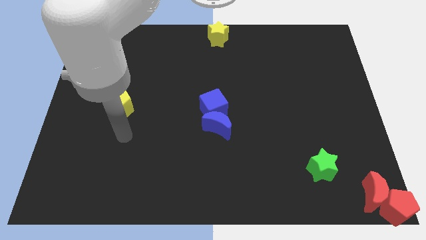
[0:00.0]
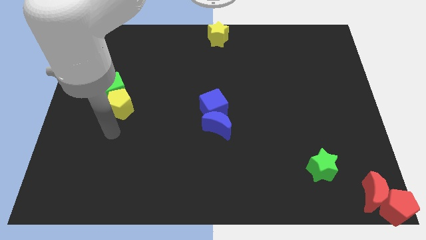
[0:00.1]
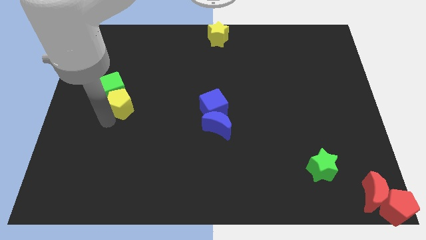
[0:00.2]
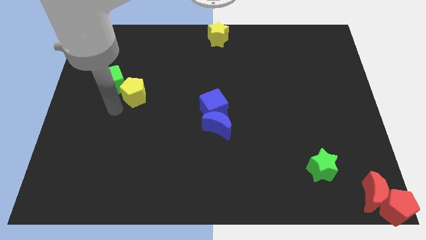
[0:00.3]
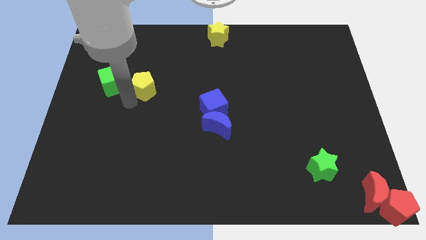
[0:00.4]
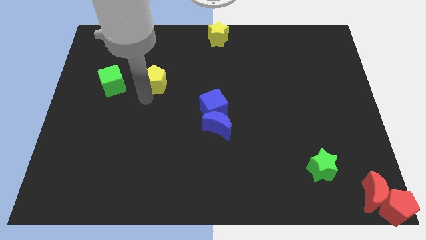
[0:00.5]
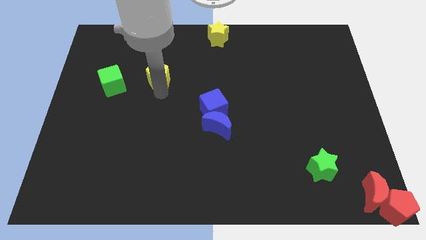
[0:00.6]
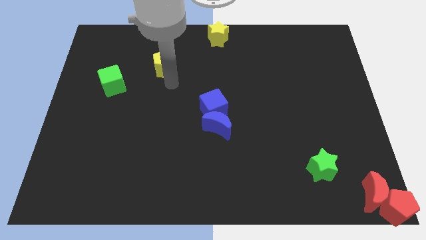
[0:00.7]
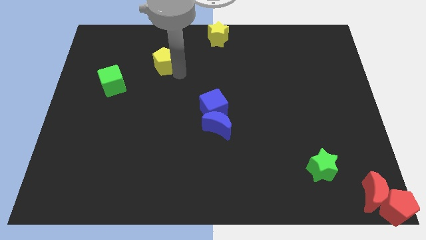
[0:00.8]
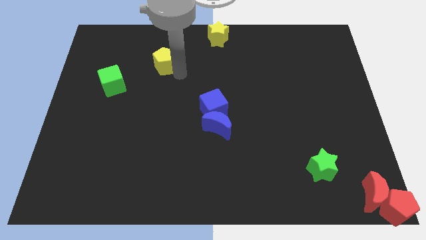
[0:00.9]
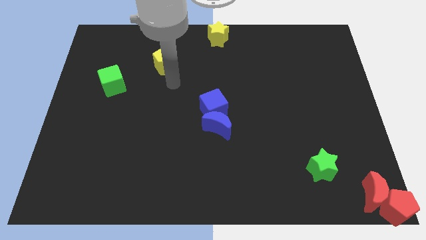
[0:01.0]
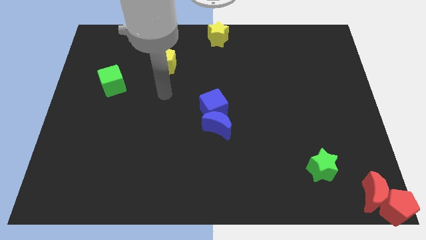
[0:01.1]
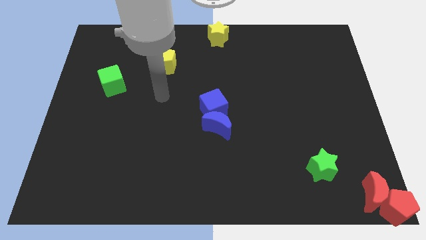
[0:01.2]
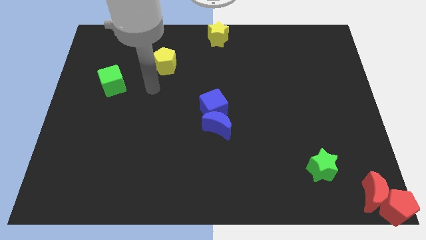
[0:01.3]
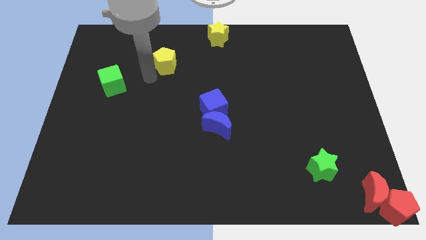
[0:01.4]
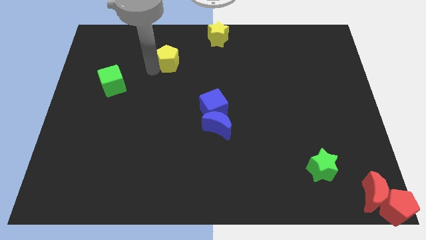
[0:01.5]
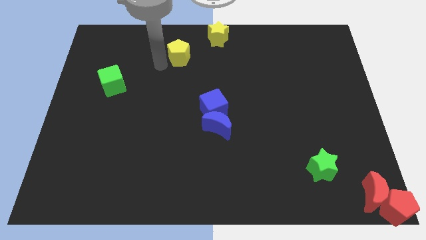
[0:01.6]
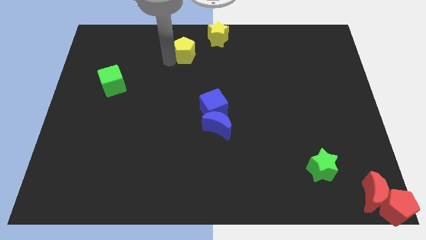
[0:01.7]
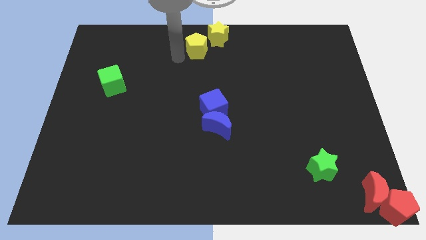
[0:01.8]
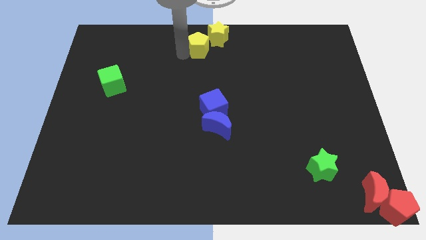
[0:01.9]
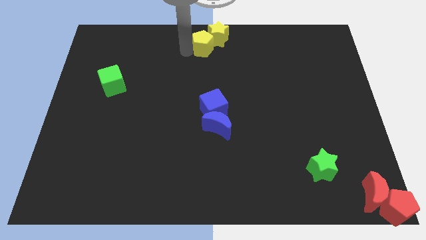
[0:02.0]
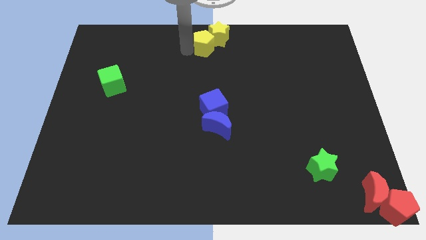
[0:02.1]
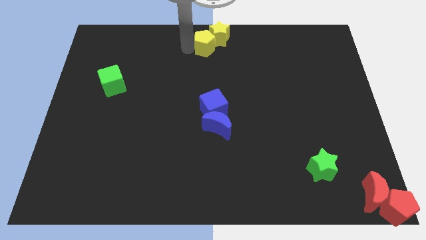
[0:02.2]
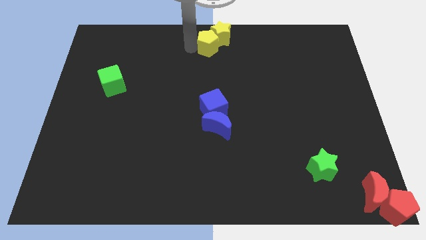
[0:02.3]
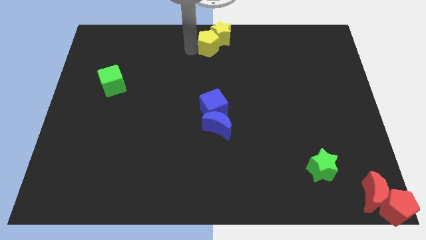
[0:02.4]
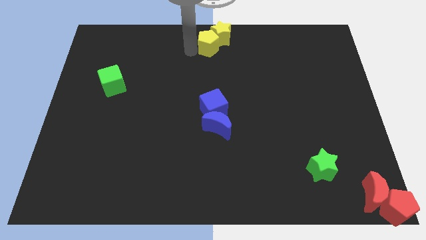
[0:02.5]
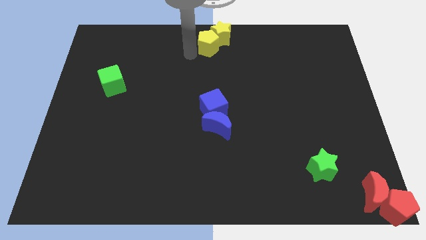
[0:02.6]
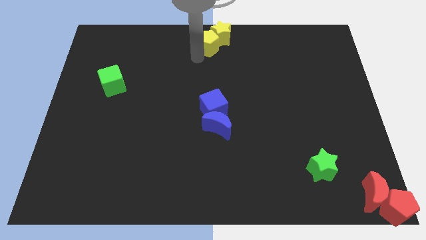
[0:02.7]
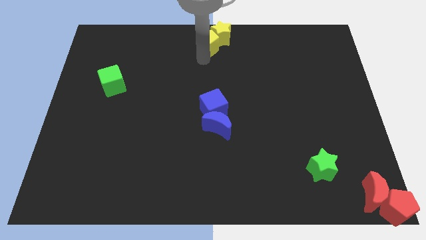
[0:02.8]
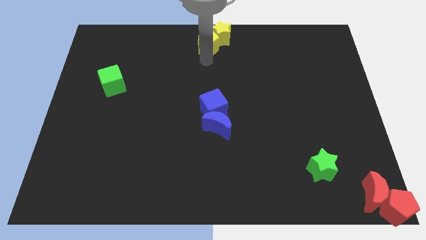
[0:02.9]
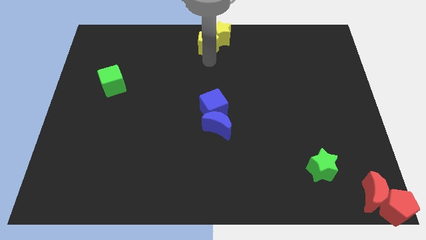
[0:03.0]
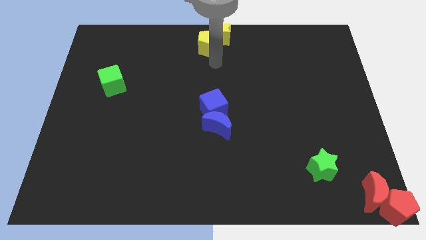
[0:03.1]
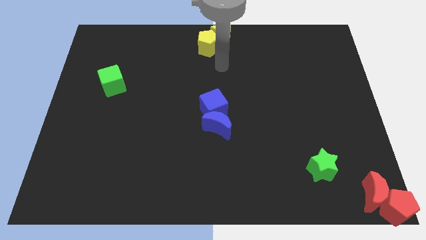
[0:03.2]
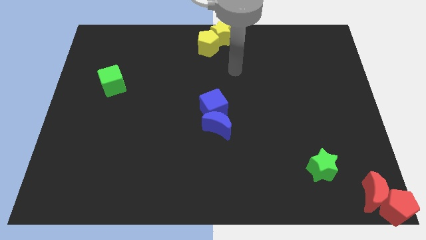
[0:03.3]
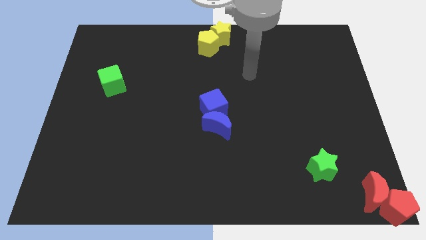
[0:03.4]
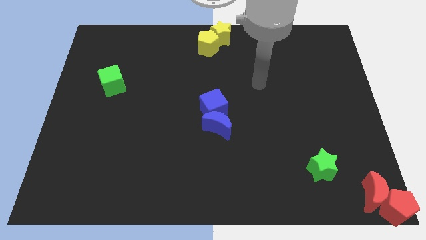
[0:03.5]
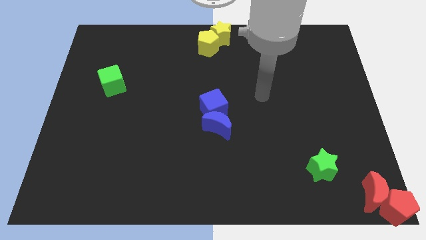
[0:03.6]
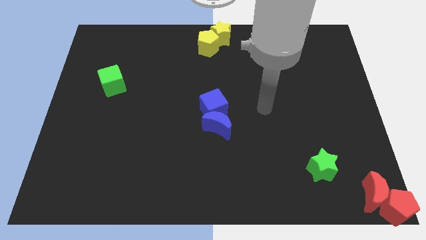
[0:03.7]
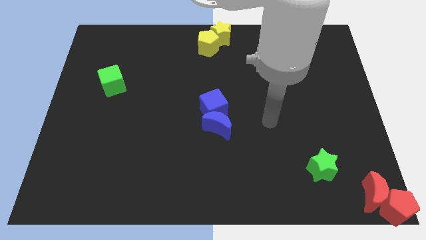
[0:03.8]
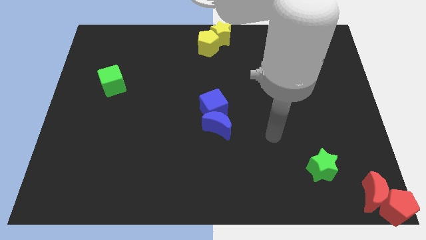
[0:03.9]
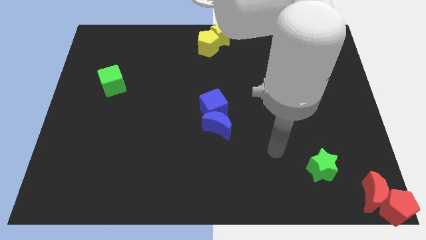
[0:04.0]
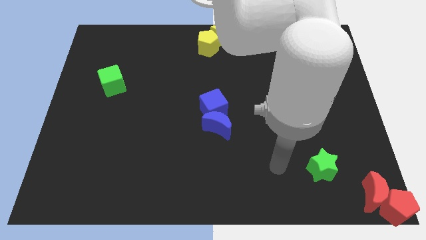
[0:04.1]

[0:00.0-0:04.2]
move the yellow pentagon to the bottom left of the yellow star

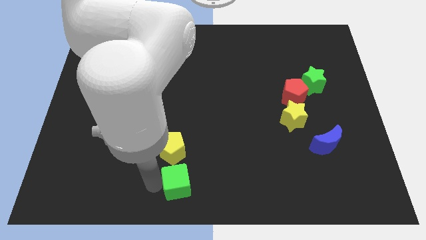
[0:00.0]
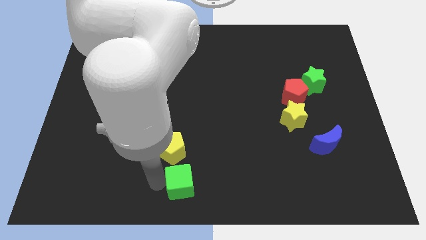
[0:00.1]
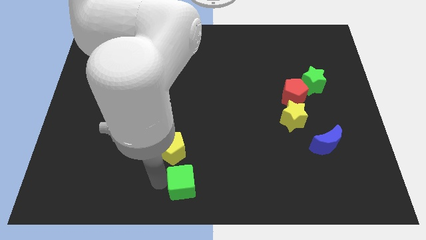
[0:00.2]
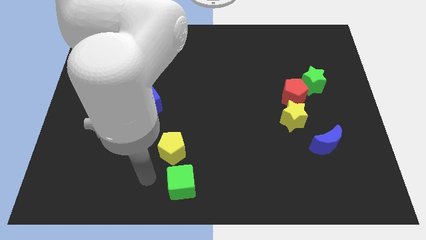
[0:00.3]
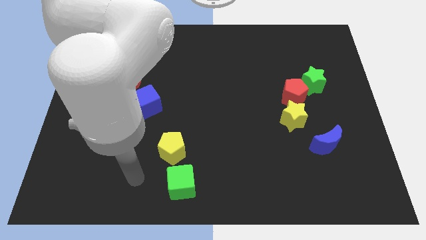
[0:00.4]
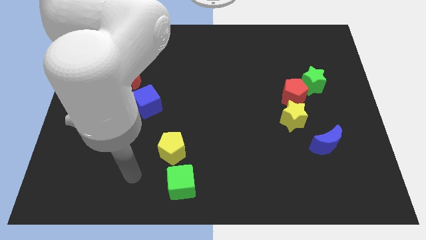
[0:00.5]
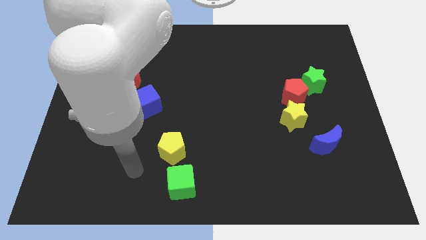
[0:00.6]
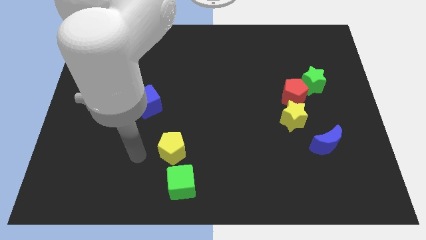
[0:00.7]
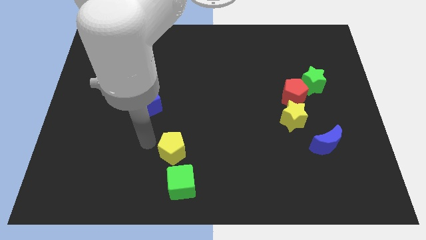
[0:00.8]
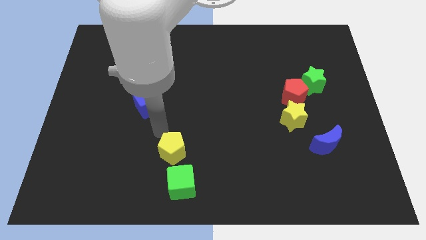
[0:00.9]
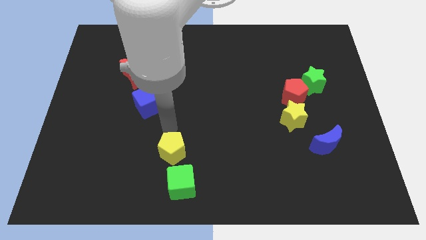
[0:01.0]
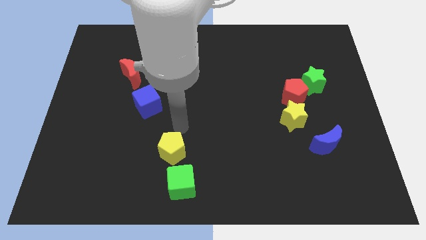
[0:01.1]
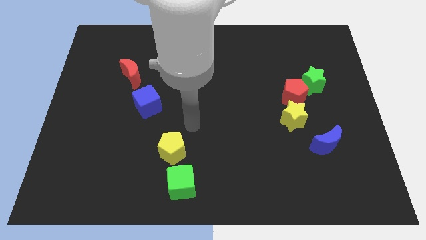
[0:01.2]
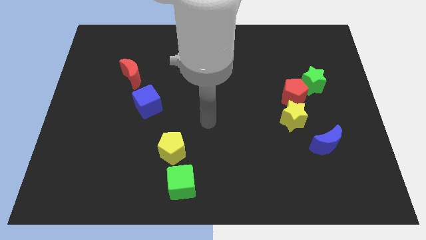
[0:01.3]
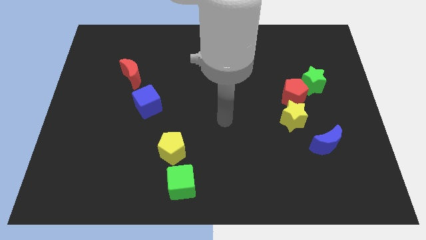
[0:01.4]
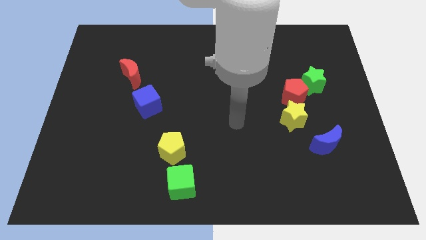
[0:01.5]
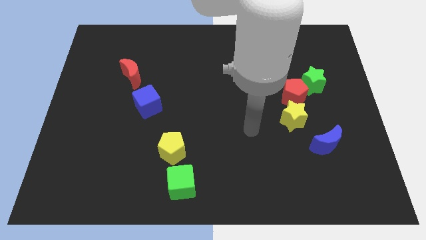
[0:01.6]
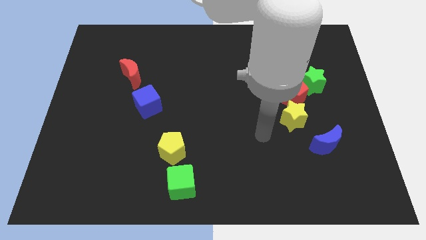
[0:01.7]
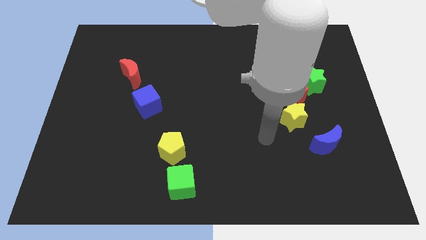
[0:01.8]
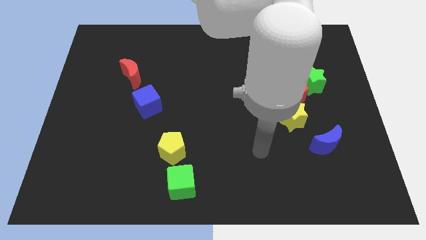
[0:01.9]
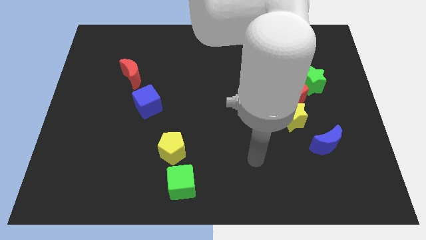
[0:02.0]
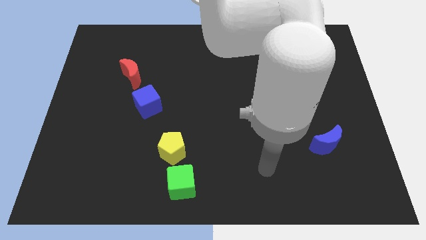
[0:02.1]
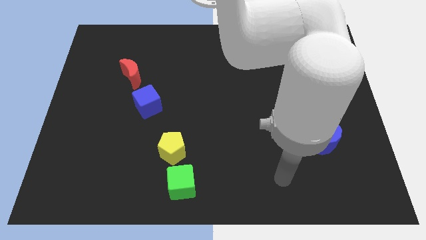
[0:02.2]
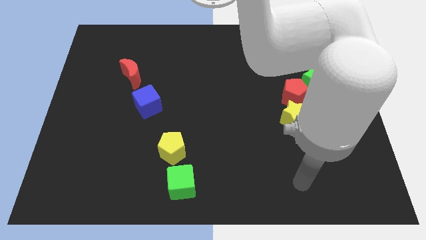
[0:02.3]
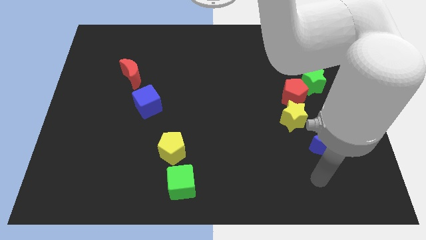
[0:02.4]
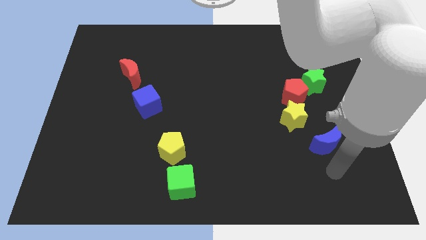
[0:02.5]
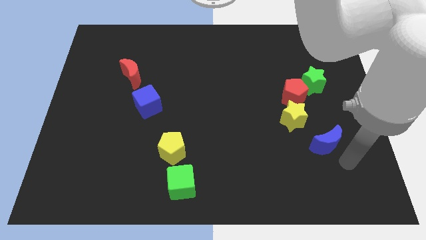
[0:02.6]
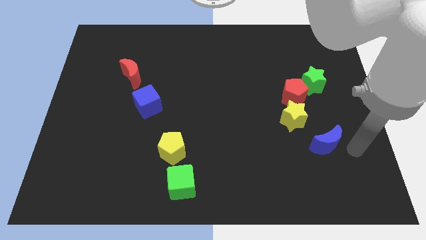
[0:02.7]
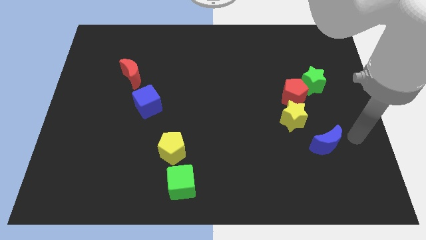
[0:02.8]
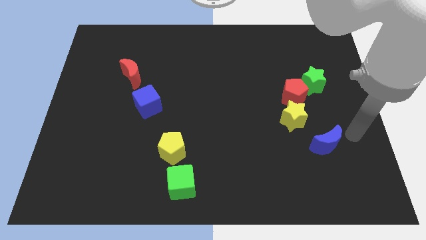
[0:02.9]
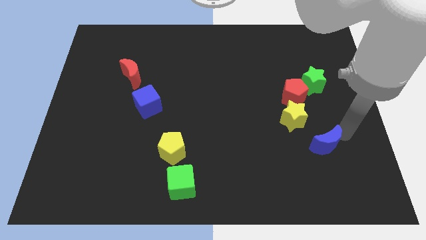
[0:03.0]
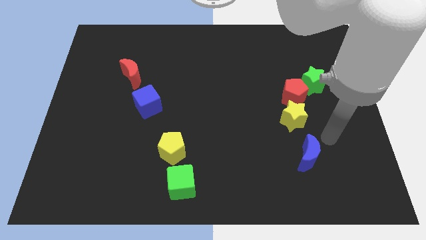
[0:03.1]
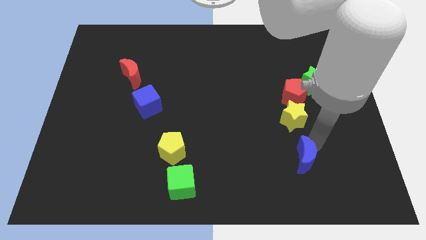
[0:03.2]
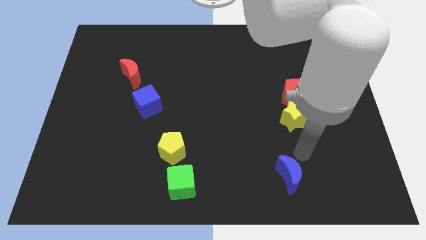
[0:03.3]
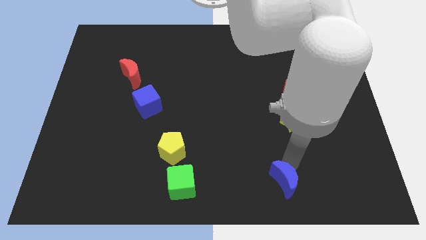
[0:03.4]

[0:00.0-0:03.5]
place the blue moon right to the green cube

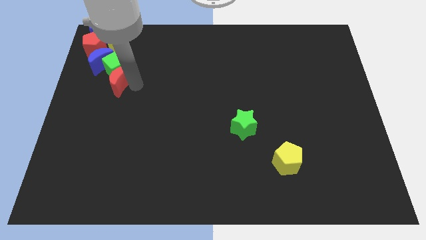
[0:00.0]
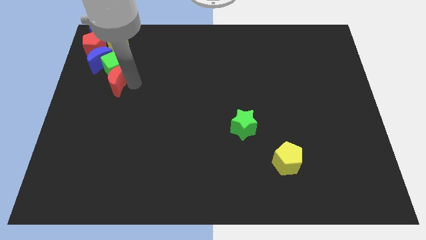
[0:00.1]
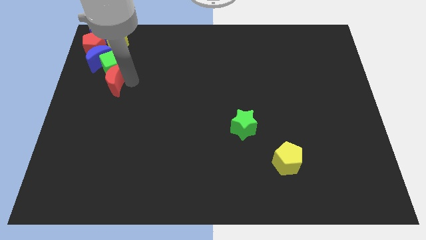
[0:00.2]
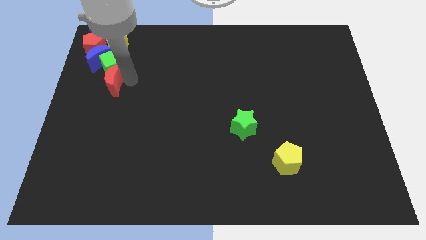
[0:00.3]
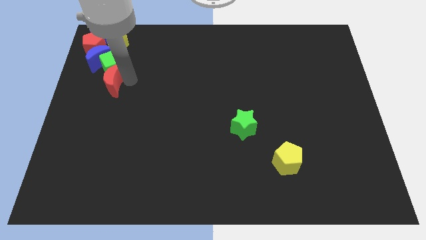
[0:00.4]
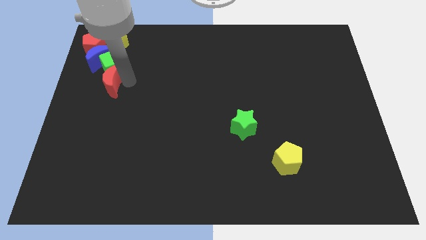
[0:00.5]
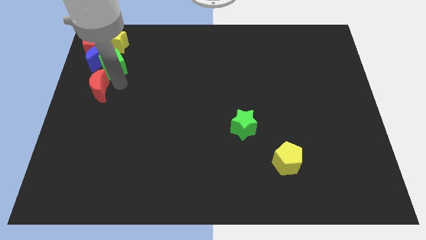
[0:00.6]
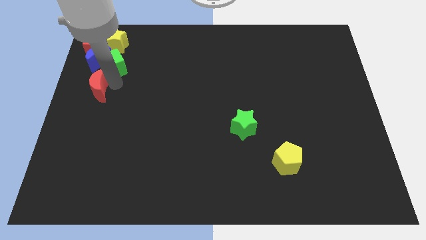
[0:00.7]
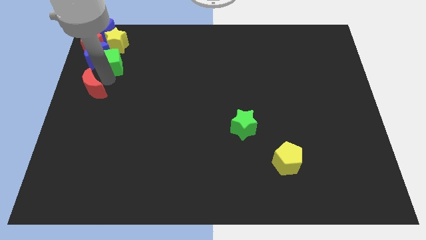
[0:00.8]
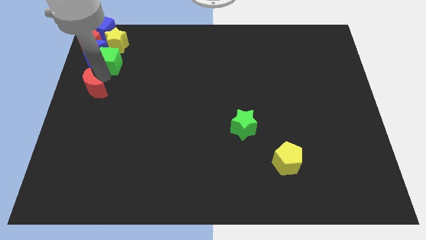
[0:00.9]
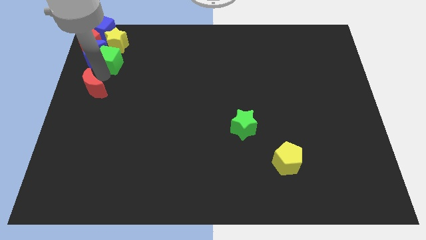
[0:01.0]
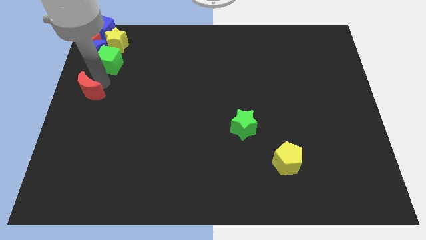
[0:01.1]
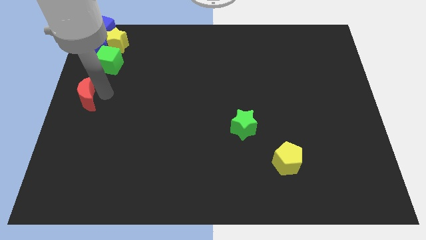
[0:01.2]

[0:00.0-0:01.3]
separate the red crescent from the green cube
